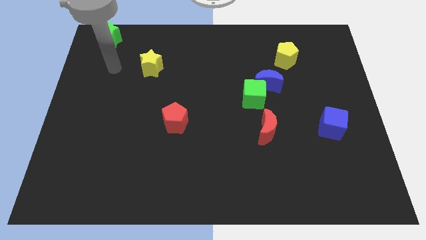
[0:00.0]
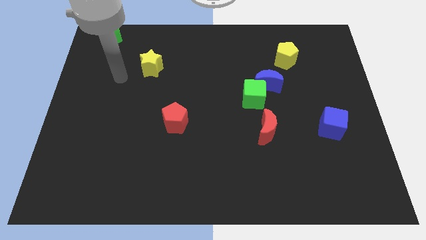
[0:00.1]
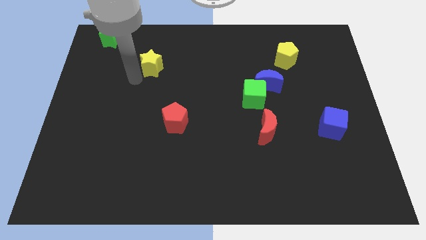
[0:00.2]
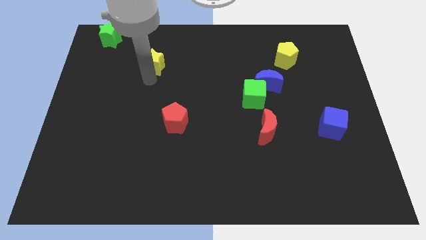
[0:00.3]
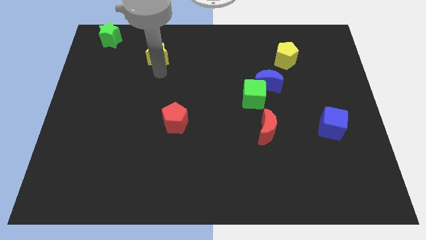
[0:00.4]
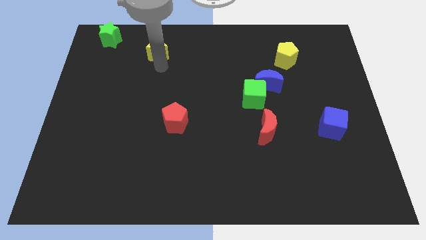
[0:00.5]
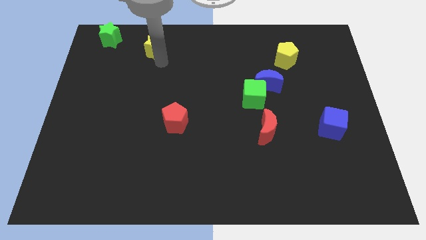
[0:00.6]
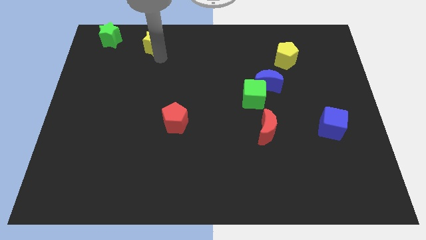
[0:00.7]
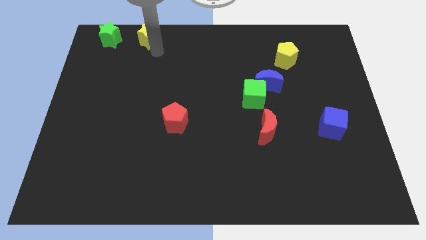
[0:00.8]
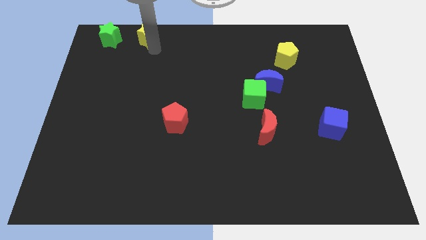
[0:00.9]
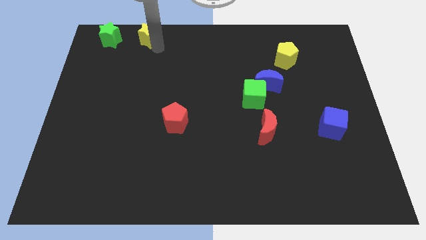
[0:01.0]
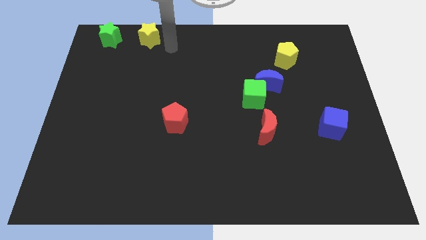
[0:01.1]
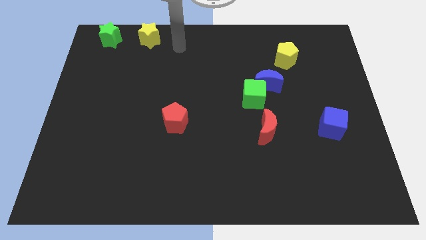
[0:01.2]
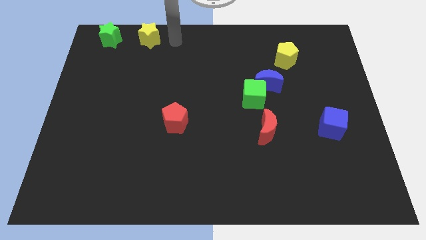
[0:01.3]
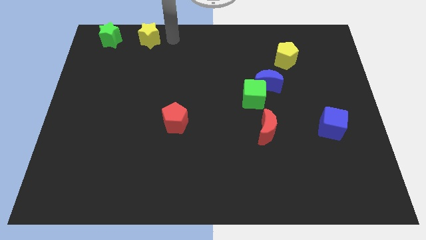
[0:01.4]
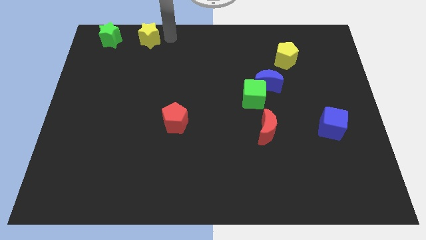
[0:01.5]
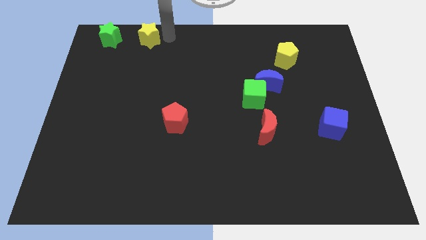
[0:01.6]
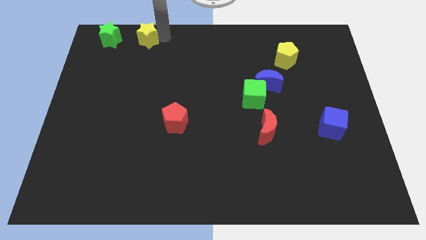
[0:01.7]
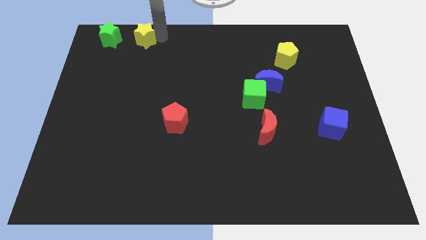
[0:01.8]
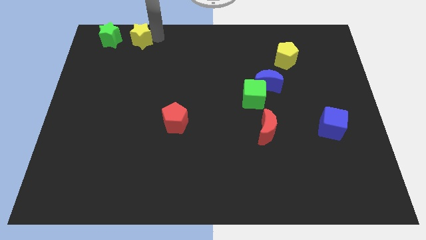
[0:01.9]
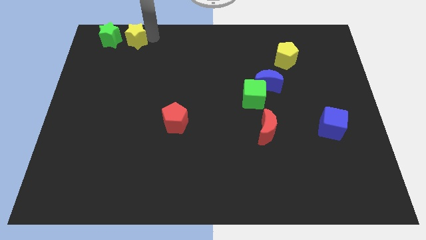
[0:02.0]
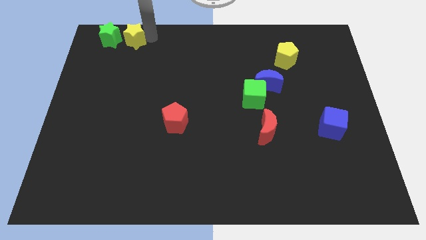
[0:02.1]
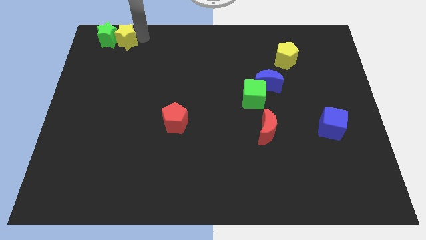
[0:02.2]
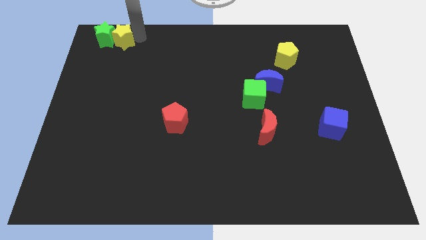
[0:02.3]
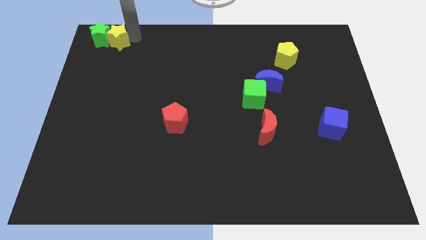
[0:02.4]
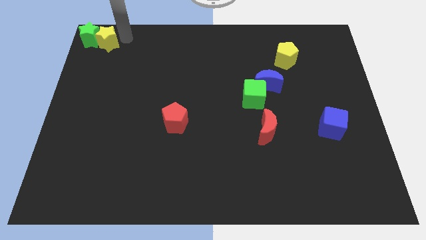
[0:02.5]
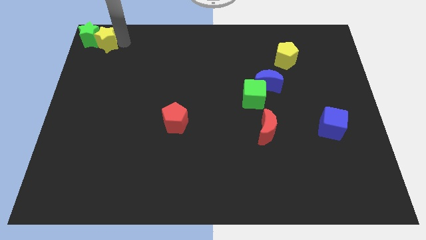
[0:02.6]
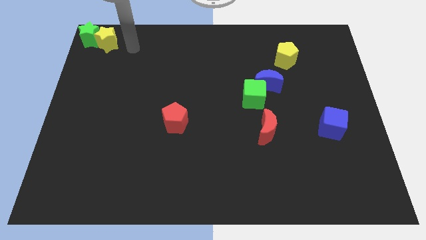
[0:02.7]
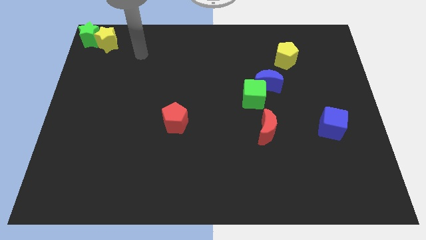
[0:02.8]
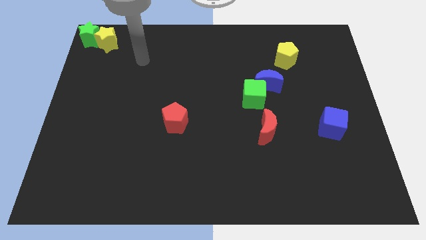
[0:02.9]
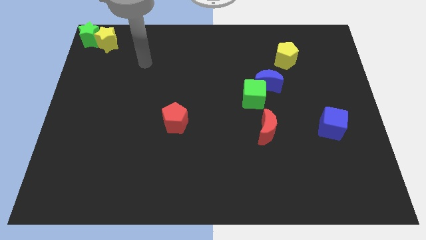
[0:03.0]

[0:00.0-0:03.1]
push yellow star in to green star

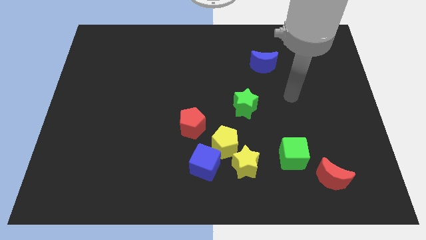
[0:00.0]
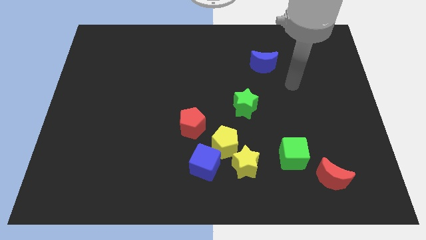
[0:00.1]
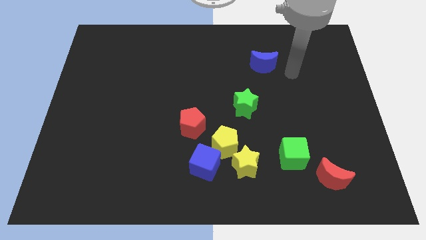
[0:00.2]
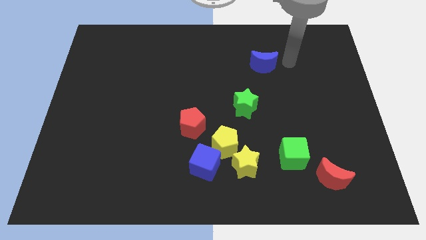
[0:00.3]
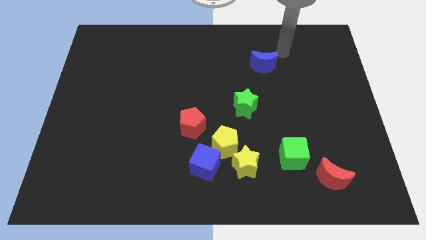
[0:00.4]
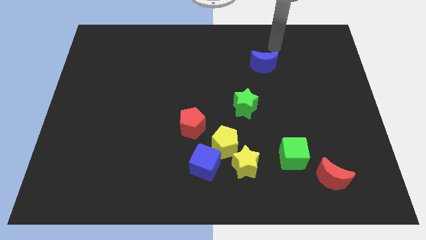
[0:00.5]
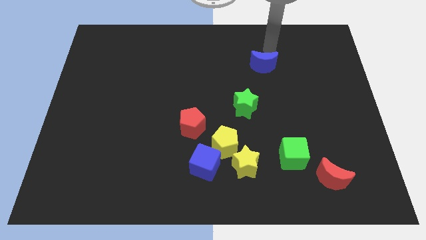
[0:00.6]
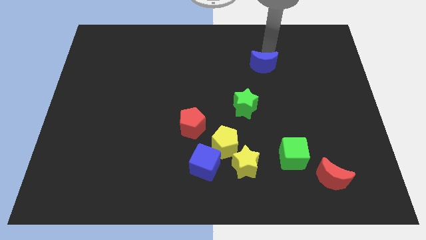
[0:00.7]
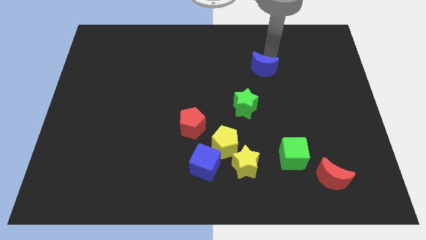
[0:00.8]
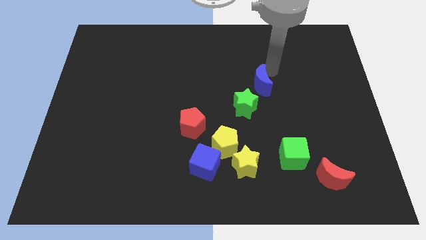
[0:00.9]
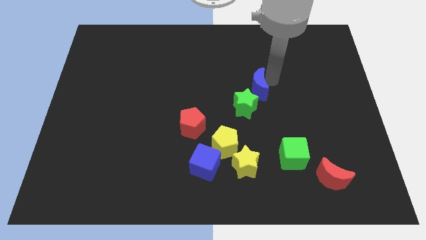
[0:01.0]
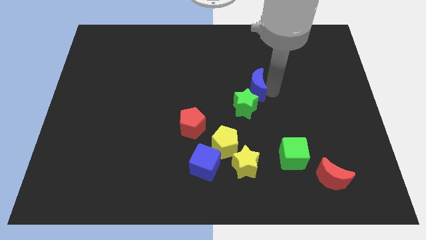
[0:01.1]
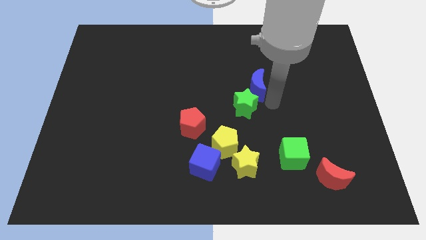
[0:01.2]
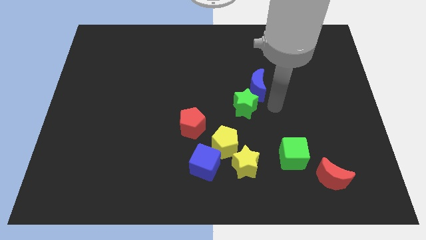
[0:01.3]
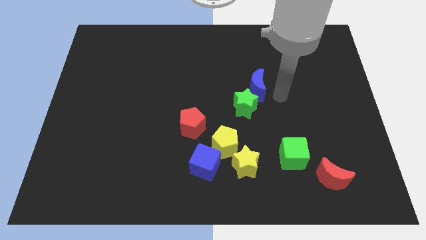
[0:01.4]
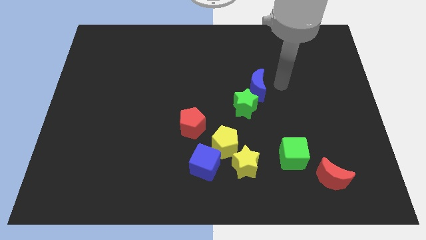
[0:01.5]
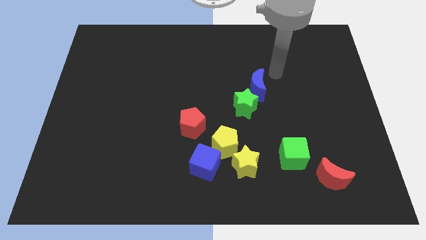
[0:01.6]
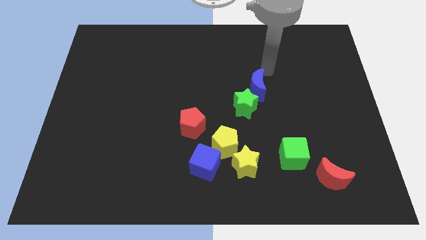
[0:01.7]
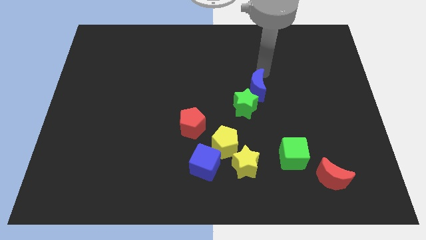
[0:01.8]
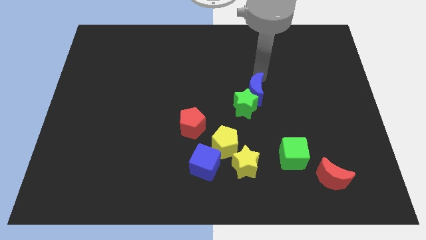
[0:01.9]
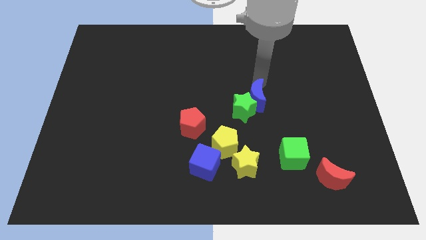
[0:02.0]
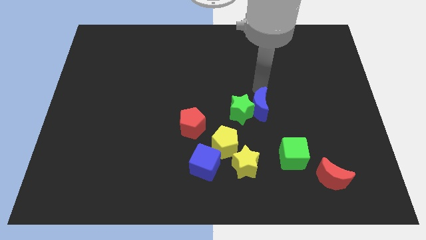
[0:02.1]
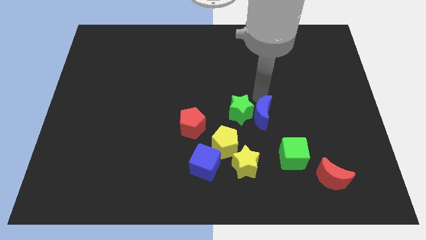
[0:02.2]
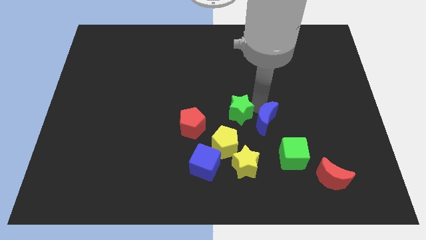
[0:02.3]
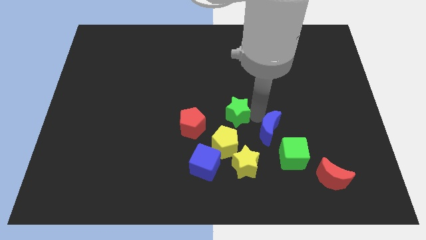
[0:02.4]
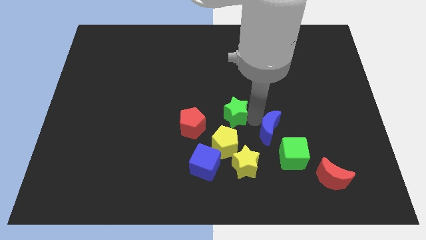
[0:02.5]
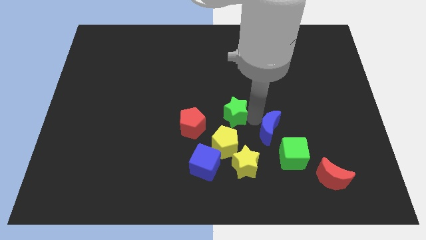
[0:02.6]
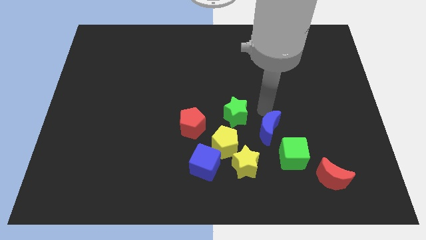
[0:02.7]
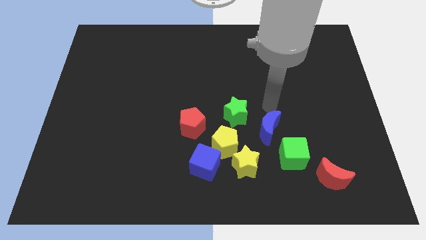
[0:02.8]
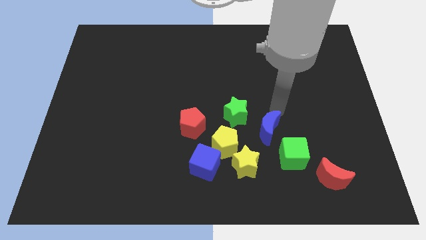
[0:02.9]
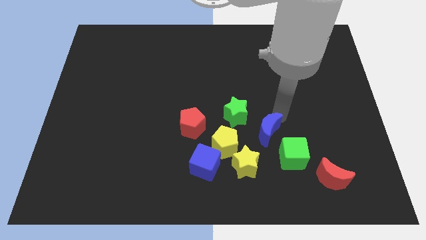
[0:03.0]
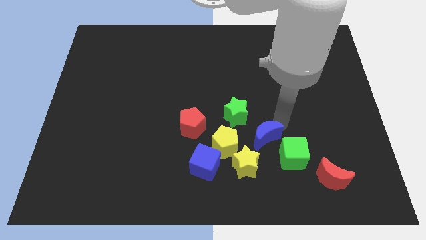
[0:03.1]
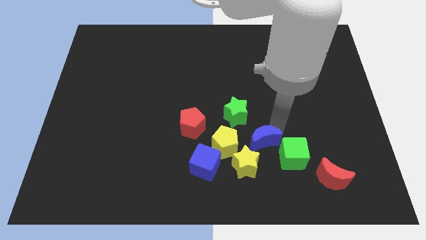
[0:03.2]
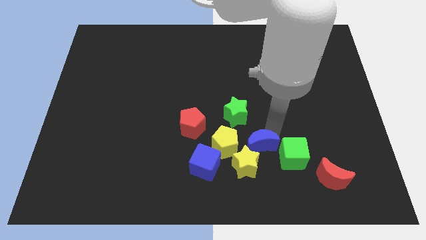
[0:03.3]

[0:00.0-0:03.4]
separate the blue moon from the green star

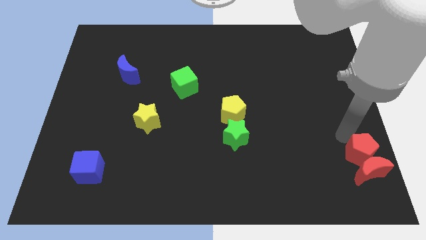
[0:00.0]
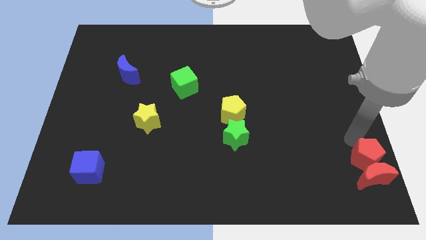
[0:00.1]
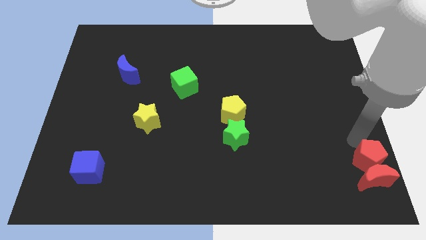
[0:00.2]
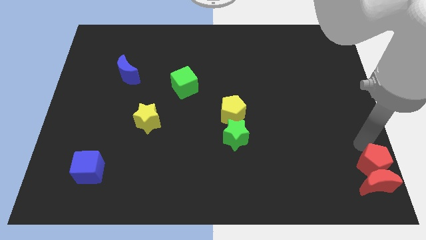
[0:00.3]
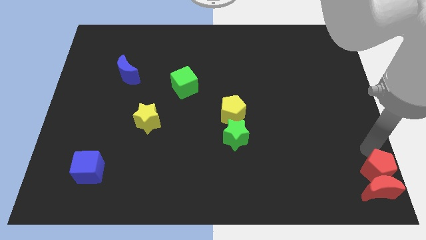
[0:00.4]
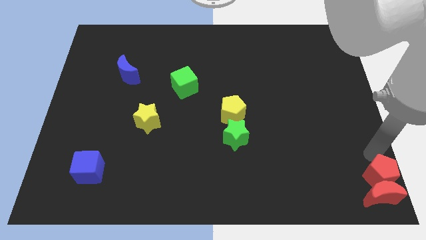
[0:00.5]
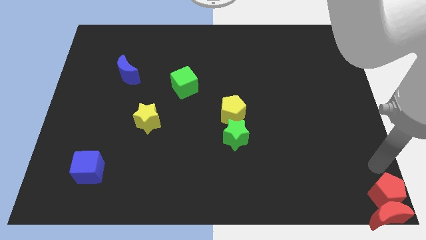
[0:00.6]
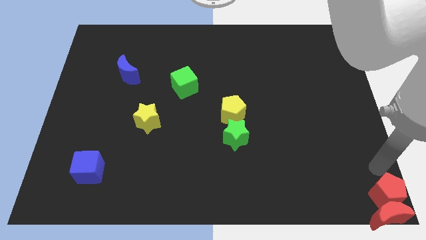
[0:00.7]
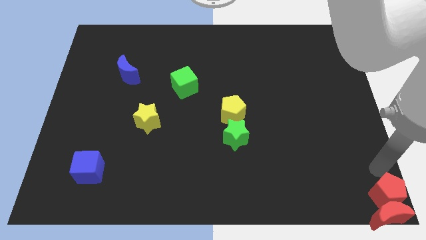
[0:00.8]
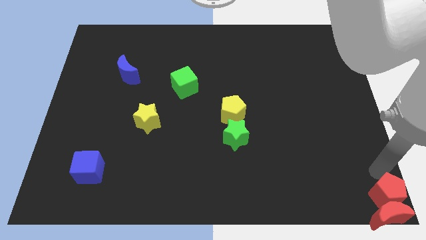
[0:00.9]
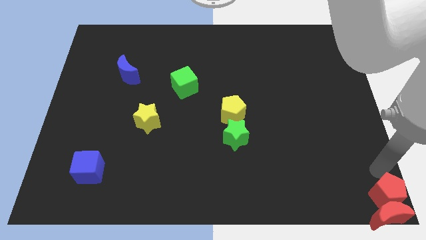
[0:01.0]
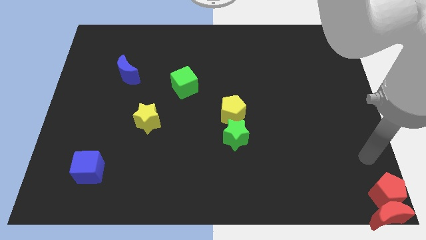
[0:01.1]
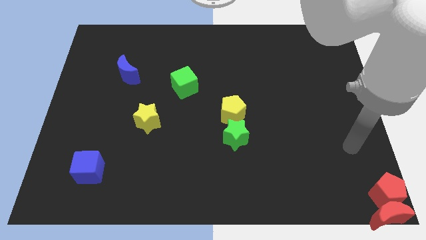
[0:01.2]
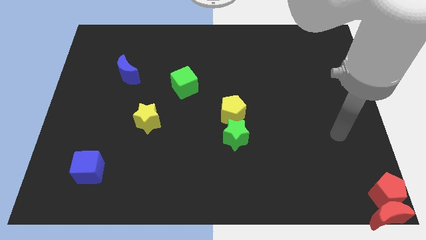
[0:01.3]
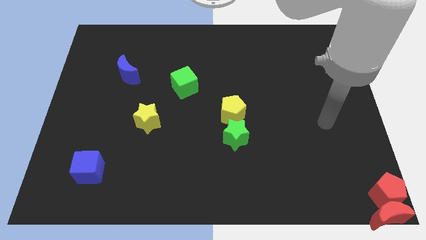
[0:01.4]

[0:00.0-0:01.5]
place the red crescent to the bottom right of the board

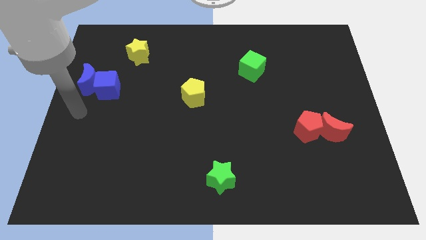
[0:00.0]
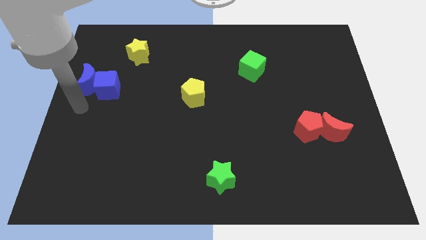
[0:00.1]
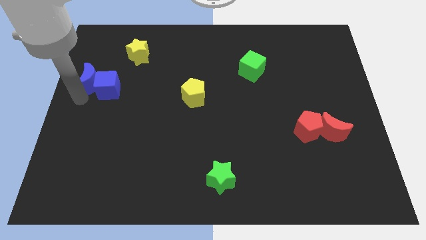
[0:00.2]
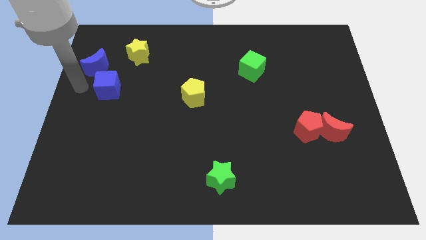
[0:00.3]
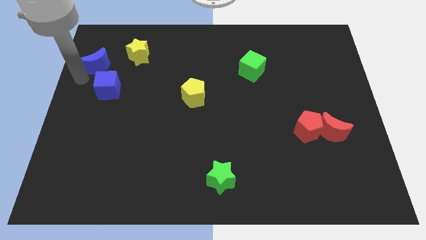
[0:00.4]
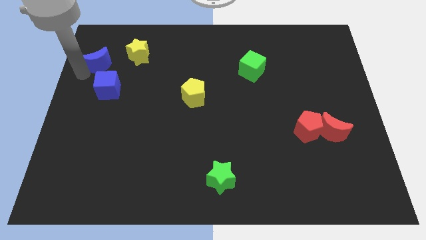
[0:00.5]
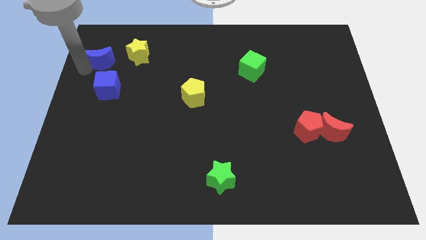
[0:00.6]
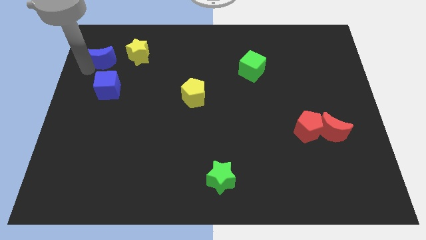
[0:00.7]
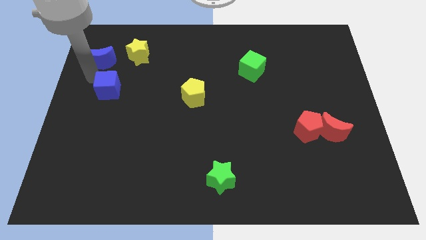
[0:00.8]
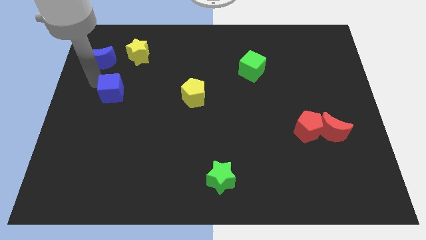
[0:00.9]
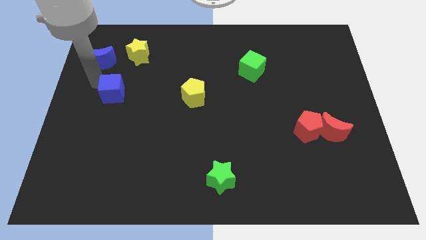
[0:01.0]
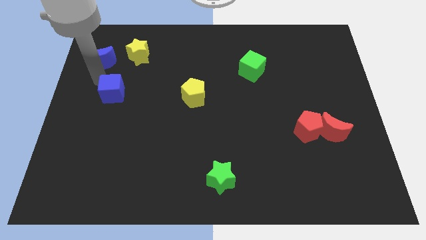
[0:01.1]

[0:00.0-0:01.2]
place the blue crescent to the left of the yellow star
